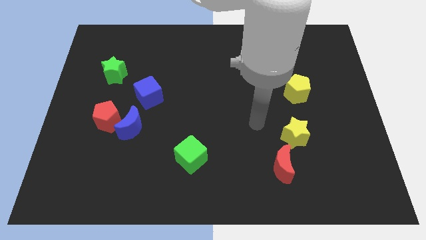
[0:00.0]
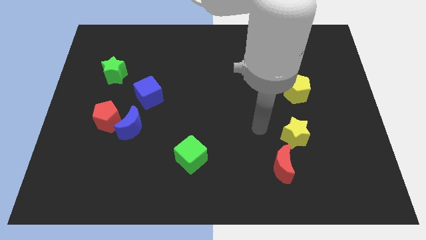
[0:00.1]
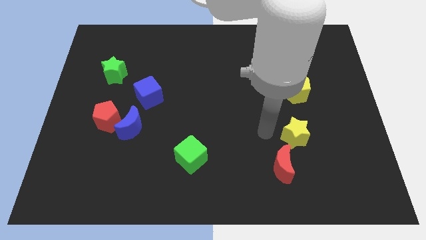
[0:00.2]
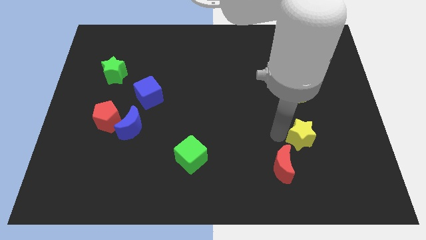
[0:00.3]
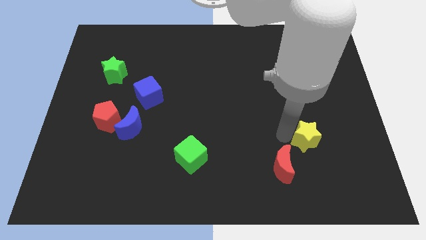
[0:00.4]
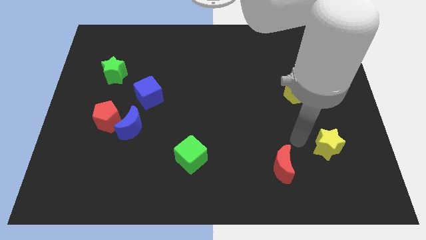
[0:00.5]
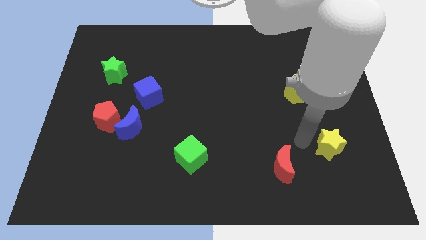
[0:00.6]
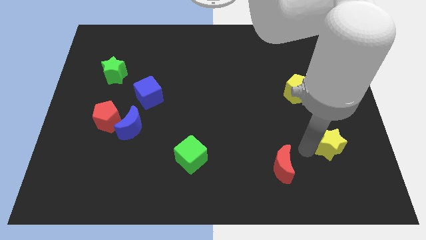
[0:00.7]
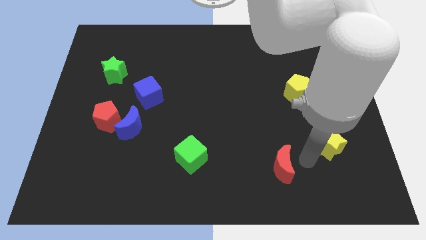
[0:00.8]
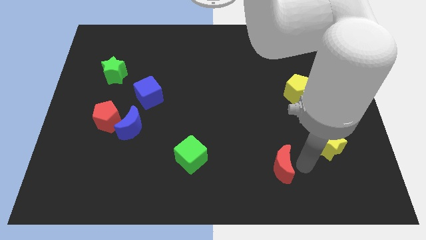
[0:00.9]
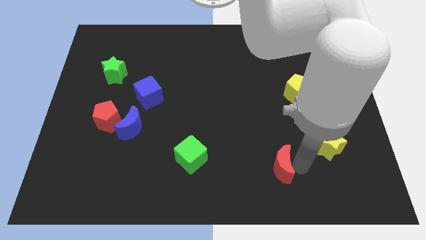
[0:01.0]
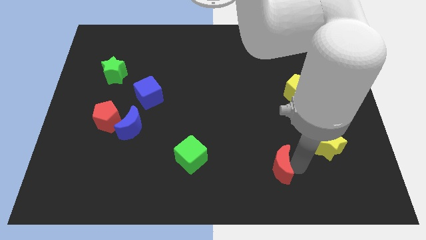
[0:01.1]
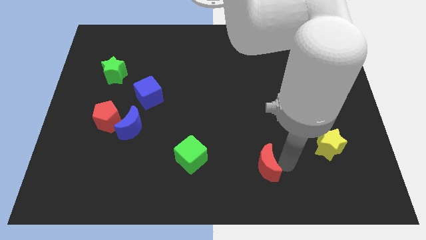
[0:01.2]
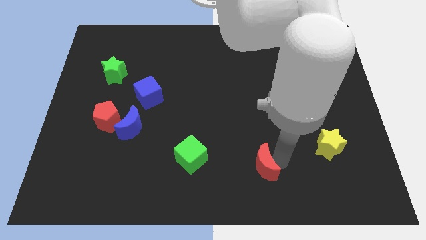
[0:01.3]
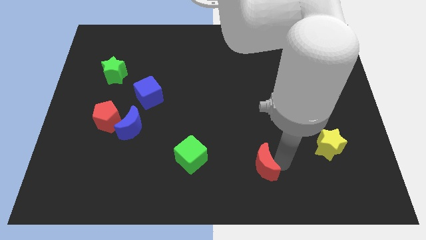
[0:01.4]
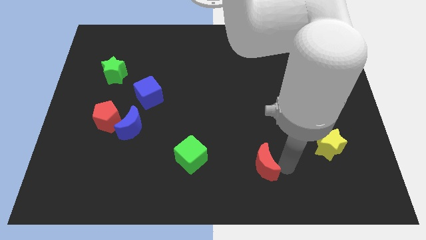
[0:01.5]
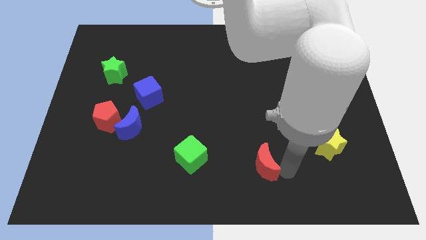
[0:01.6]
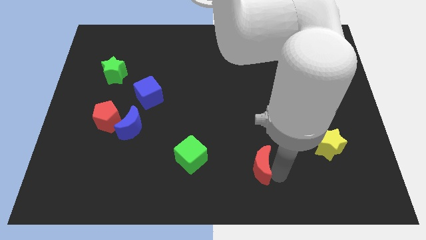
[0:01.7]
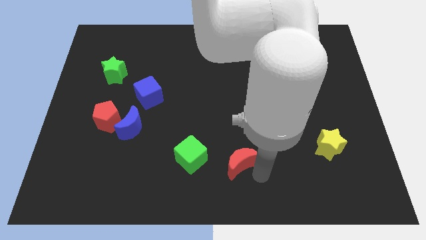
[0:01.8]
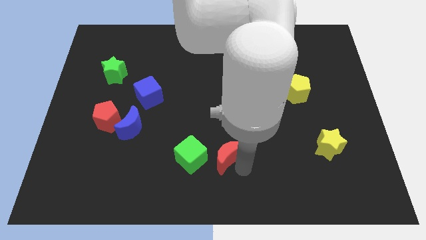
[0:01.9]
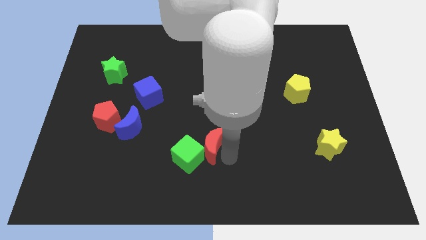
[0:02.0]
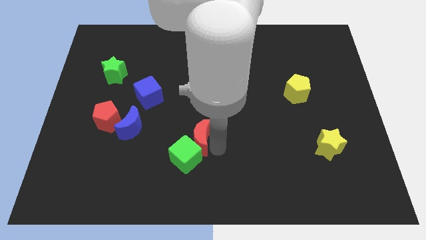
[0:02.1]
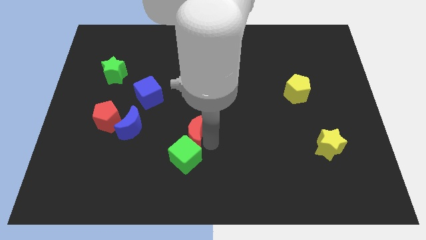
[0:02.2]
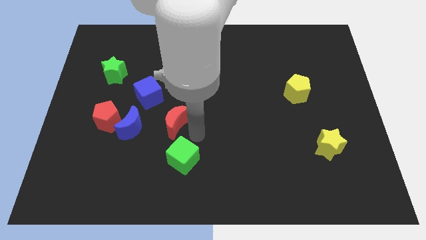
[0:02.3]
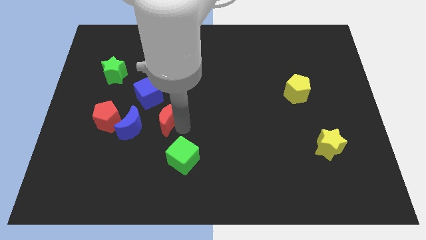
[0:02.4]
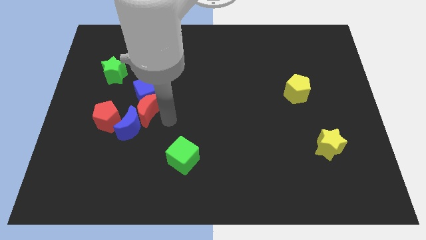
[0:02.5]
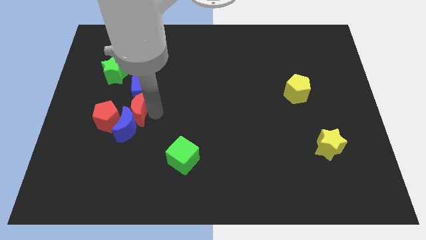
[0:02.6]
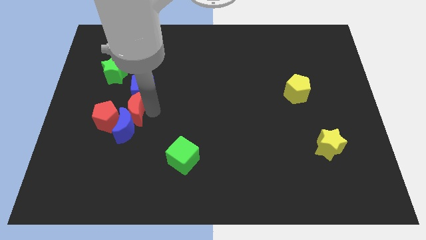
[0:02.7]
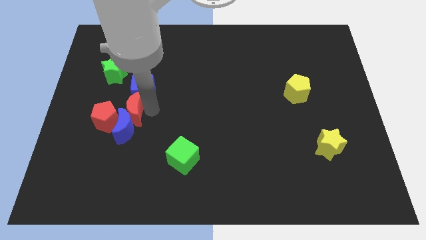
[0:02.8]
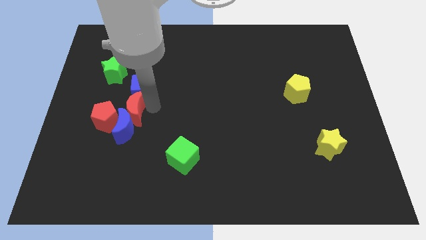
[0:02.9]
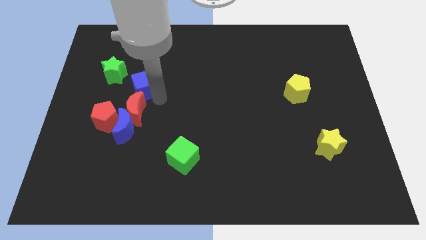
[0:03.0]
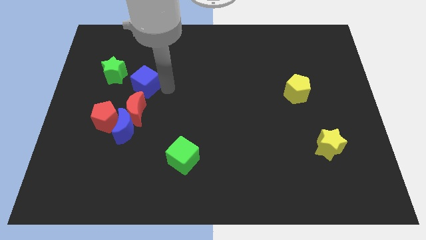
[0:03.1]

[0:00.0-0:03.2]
push the red moon into the group of blocks

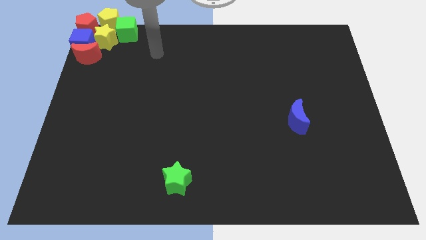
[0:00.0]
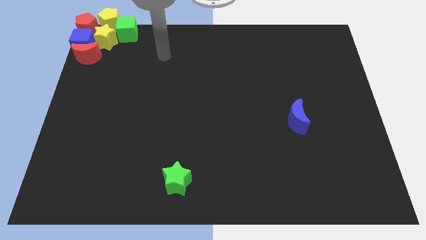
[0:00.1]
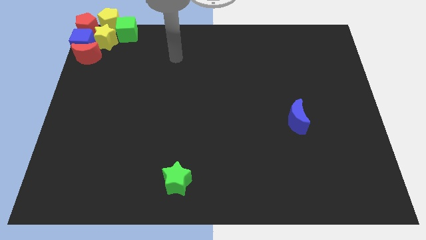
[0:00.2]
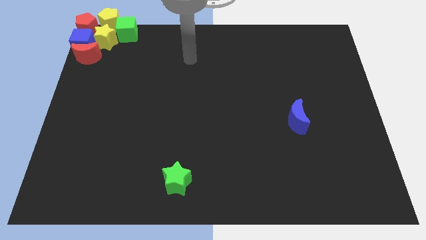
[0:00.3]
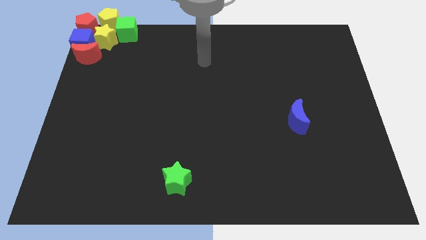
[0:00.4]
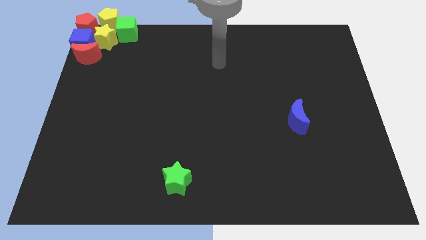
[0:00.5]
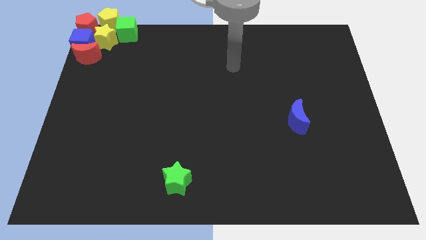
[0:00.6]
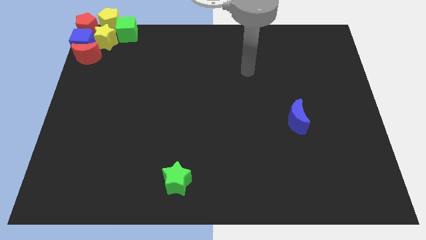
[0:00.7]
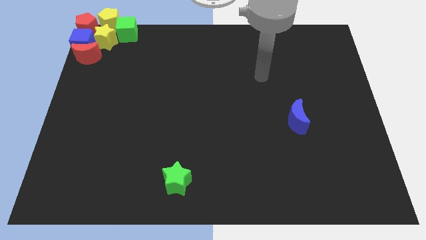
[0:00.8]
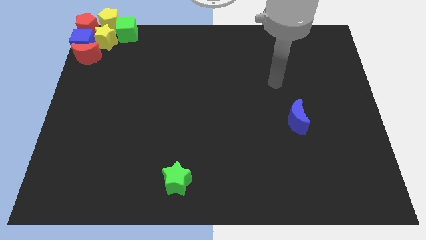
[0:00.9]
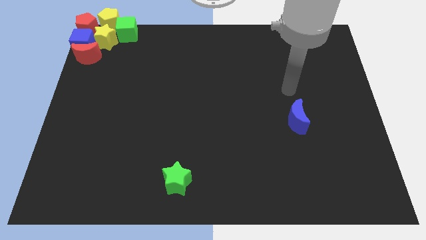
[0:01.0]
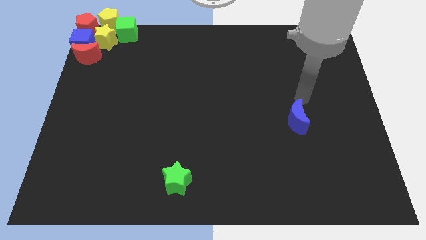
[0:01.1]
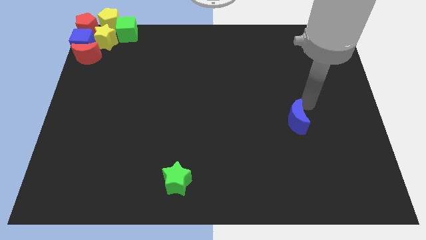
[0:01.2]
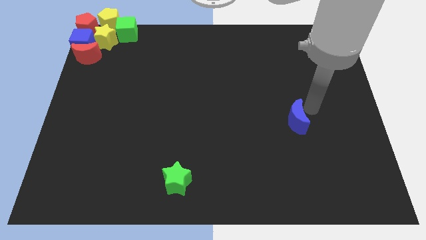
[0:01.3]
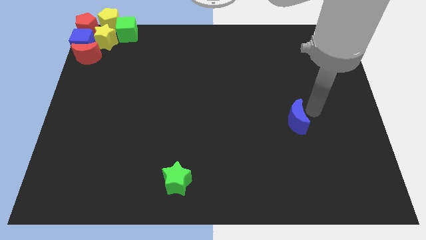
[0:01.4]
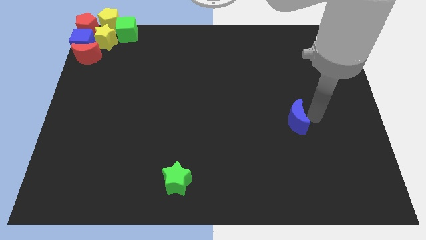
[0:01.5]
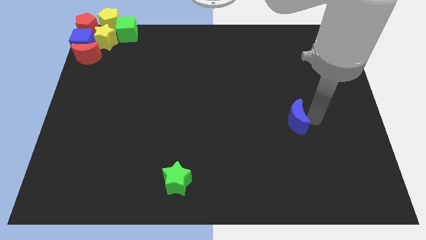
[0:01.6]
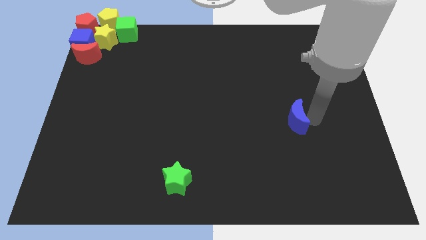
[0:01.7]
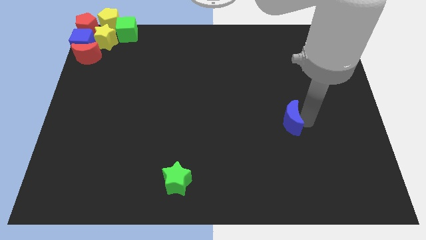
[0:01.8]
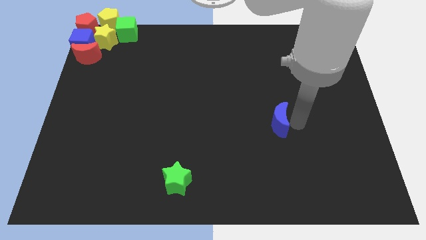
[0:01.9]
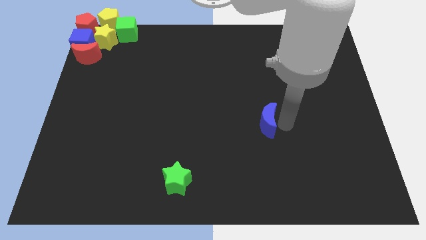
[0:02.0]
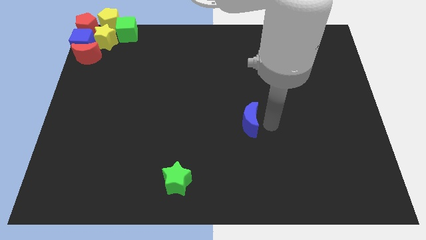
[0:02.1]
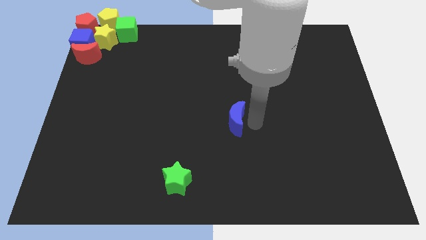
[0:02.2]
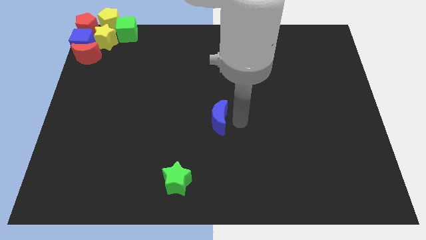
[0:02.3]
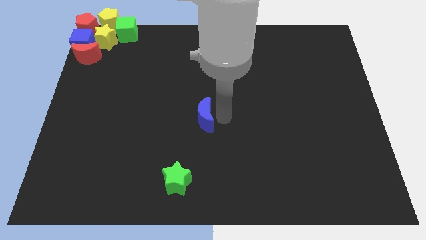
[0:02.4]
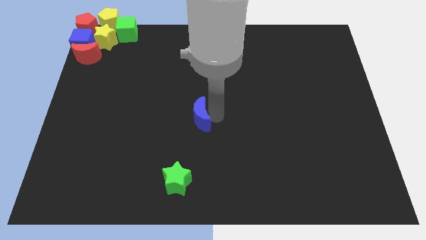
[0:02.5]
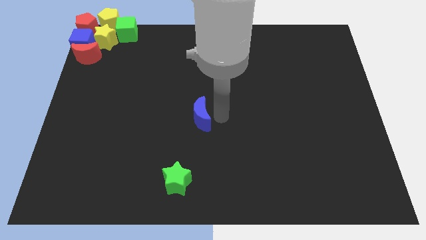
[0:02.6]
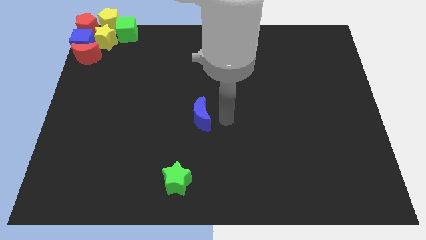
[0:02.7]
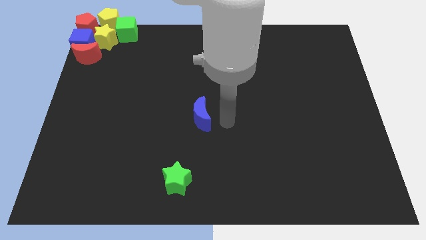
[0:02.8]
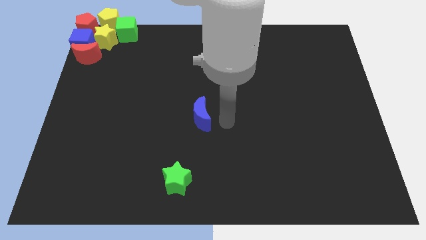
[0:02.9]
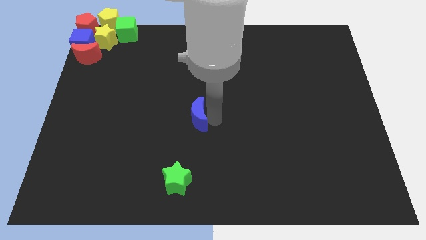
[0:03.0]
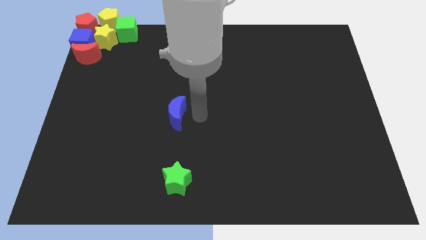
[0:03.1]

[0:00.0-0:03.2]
drag the blue moon vertically above the green star

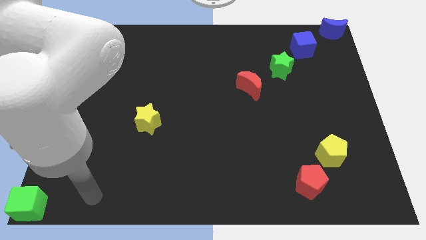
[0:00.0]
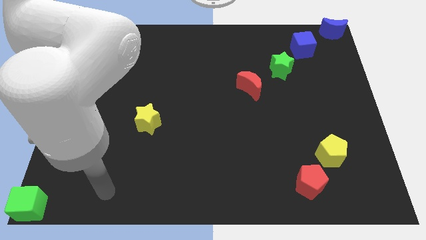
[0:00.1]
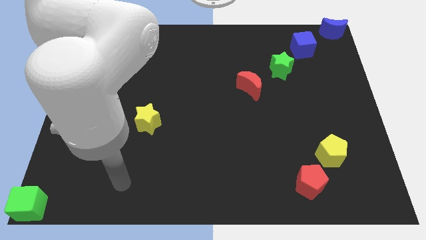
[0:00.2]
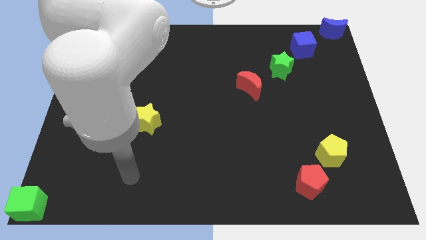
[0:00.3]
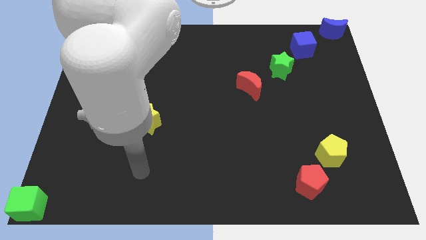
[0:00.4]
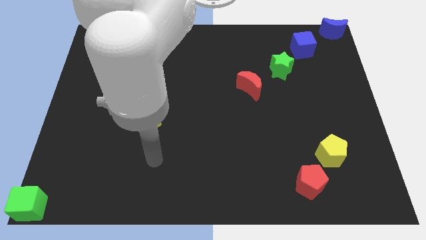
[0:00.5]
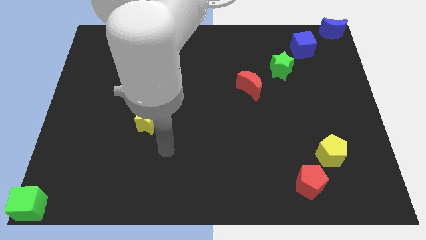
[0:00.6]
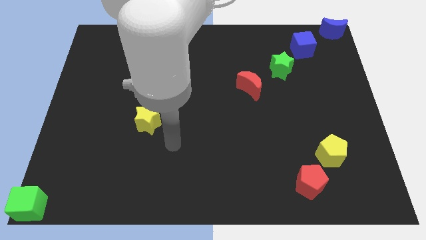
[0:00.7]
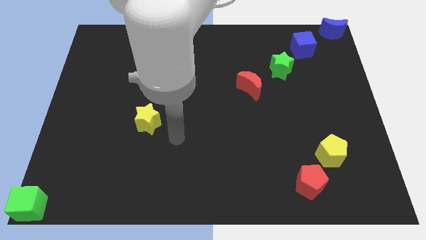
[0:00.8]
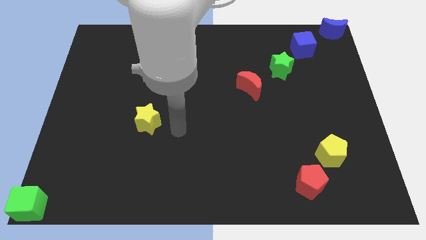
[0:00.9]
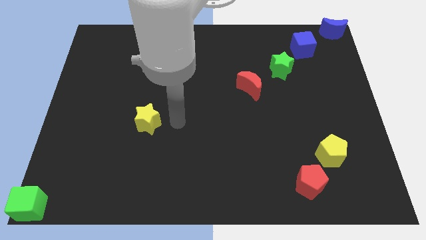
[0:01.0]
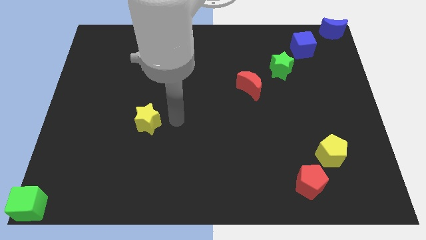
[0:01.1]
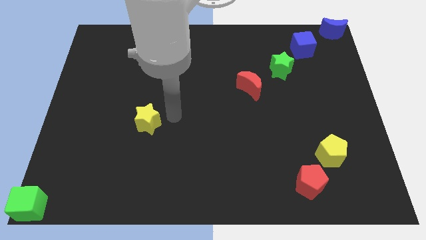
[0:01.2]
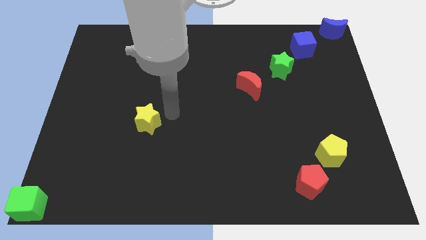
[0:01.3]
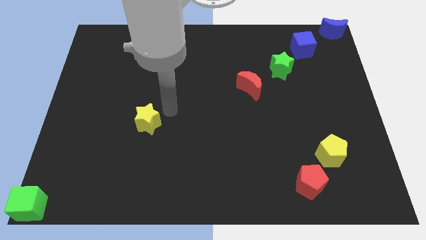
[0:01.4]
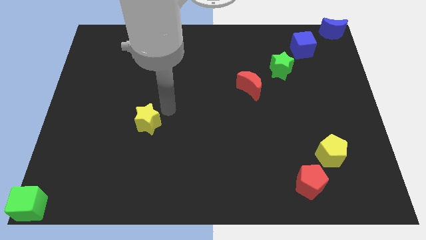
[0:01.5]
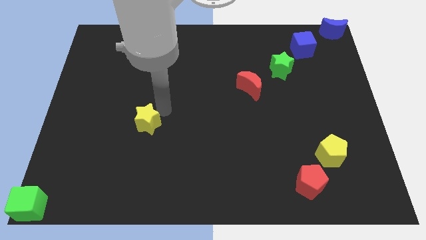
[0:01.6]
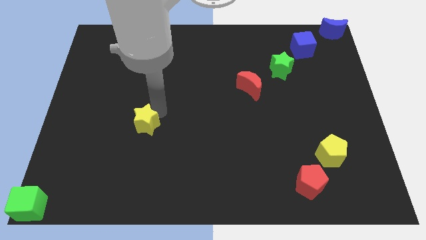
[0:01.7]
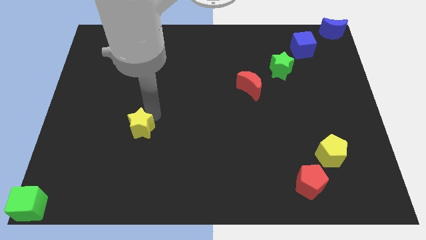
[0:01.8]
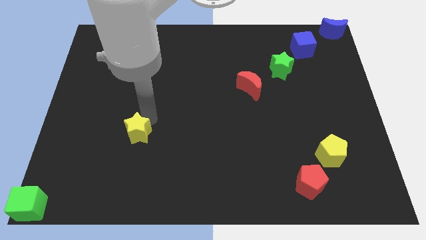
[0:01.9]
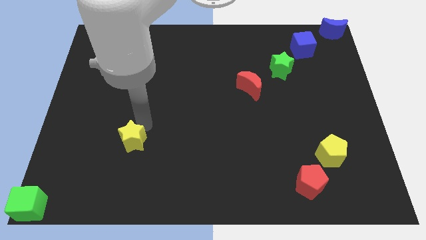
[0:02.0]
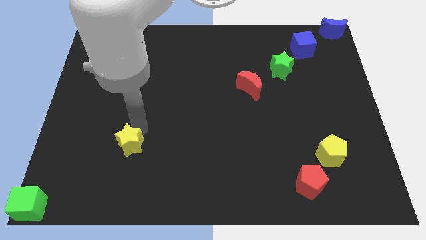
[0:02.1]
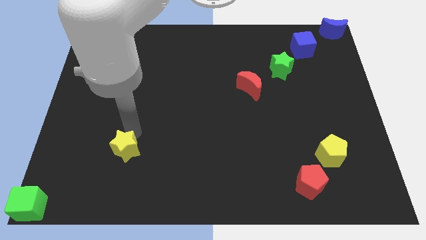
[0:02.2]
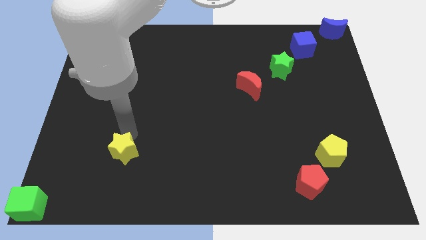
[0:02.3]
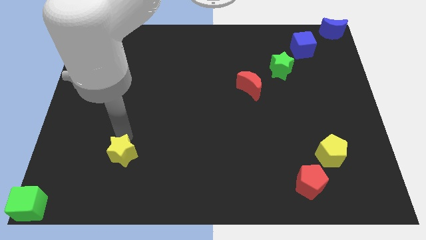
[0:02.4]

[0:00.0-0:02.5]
push the yellow star towards the green cube
